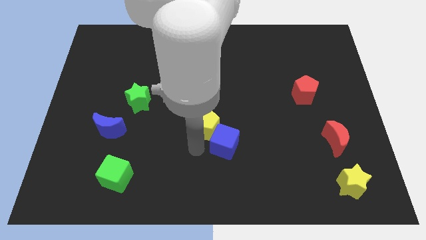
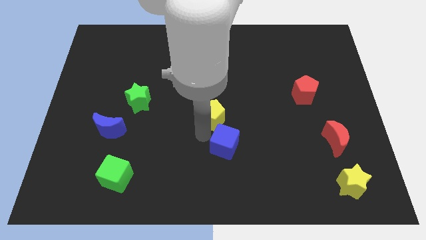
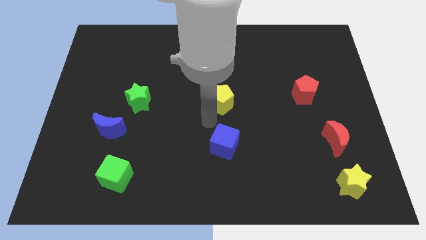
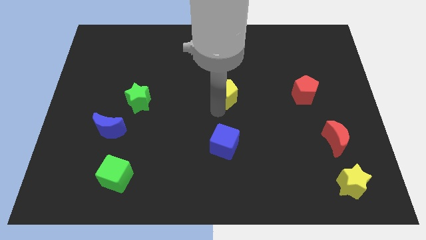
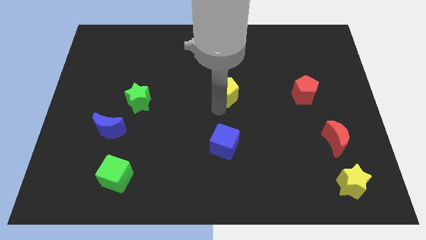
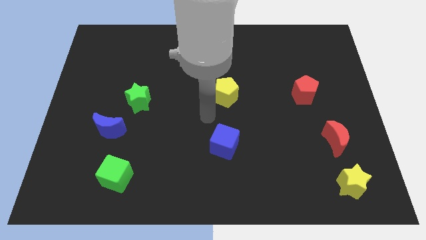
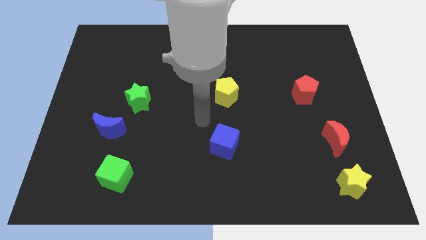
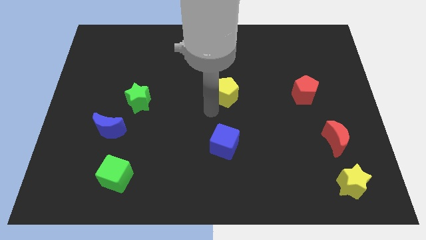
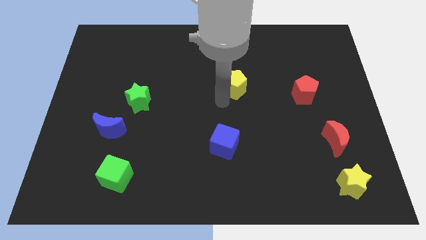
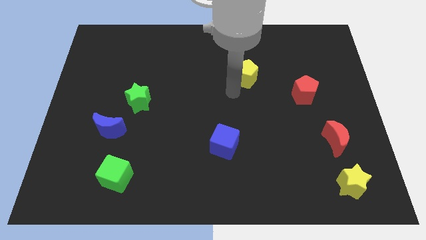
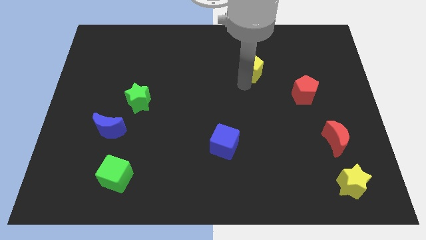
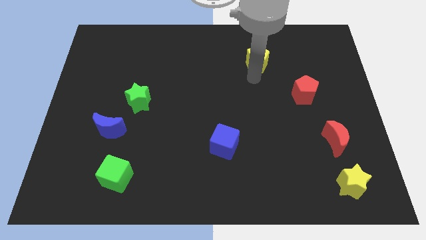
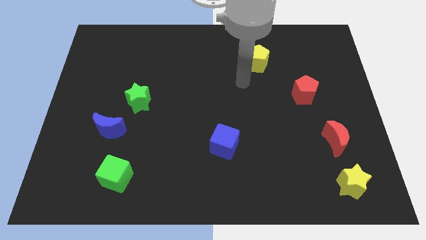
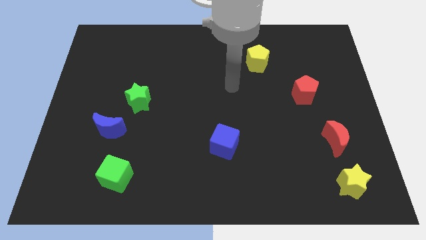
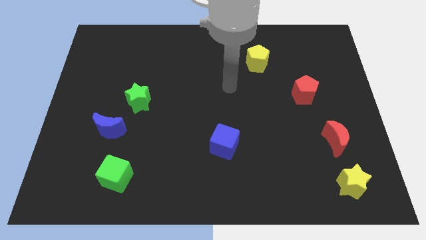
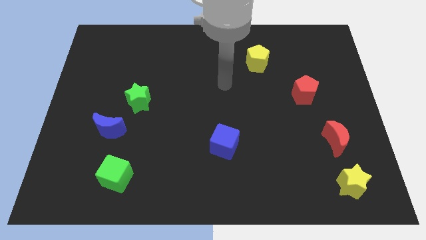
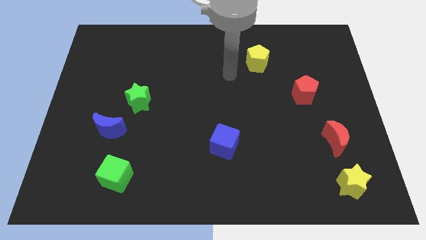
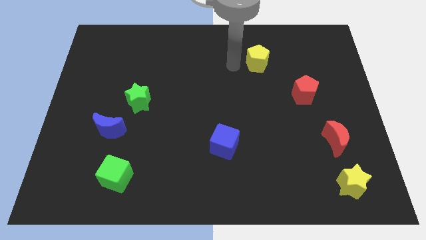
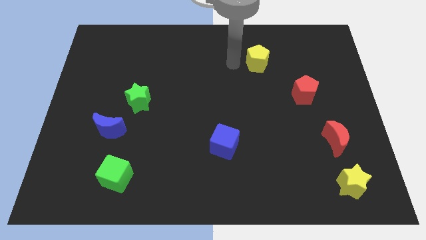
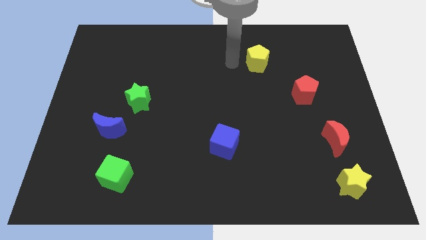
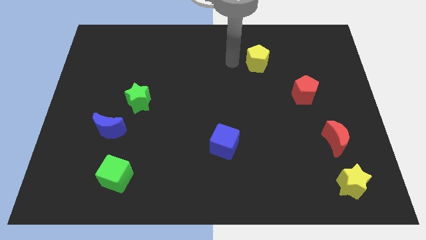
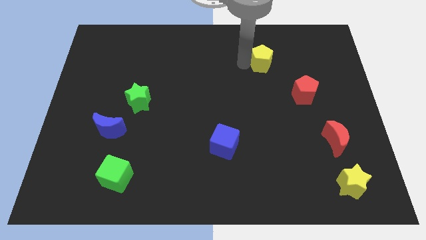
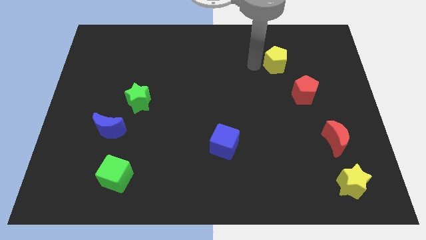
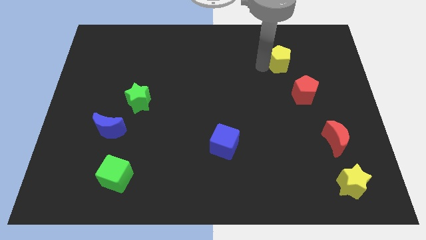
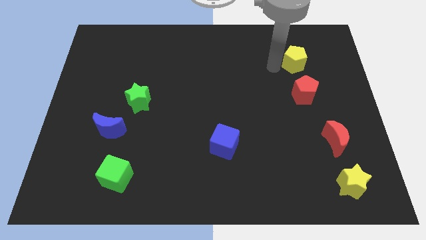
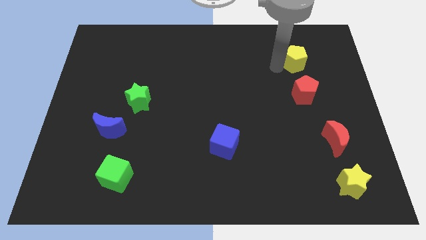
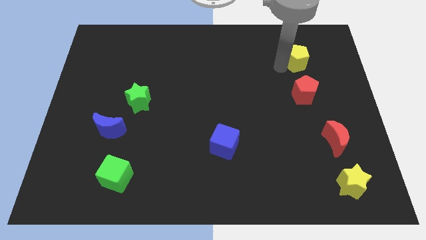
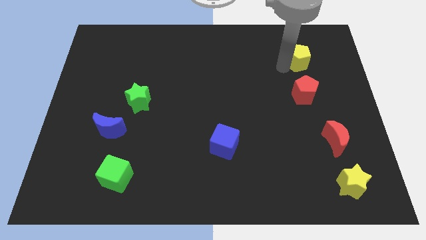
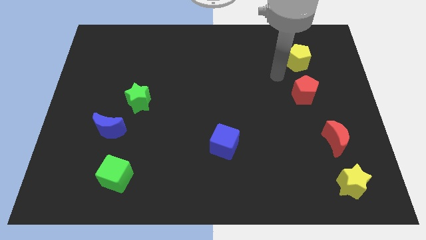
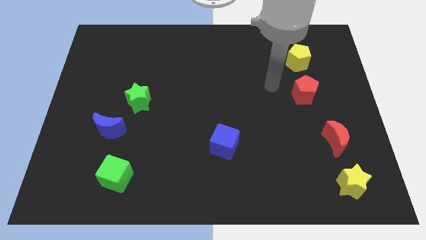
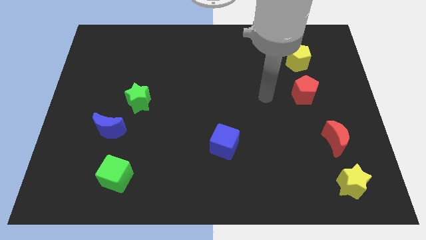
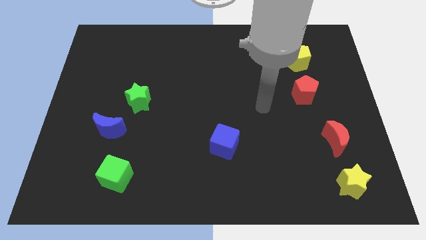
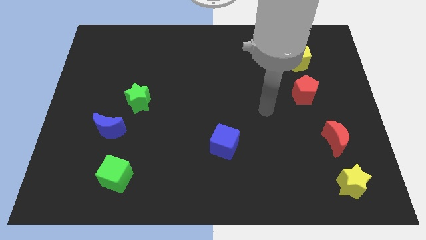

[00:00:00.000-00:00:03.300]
move the yellow pentagon towards the top of the red pentagon

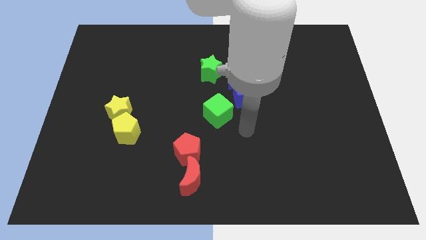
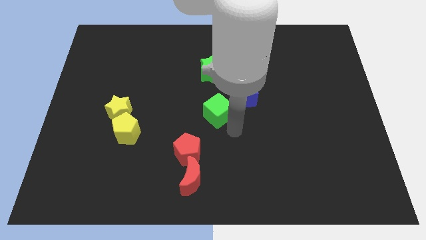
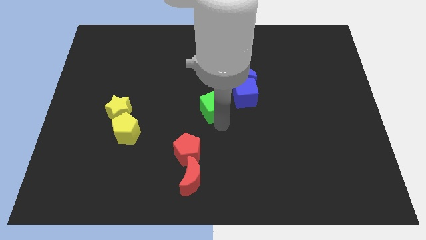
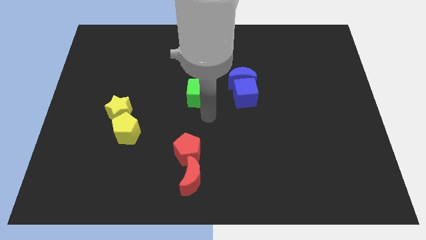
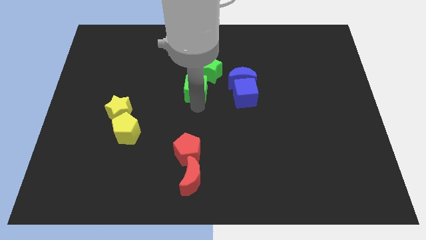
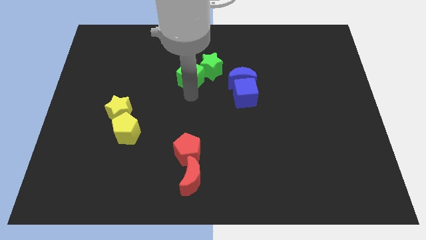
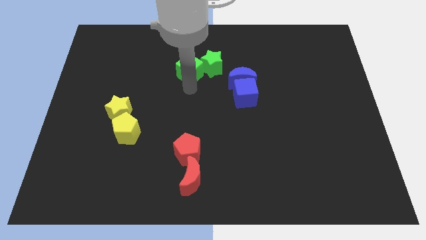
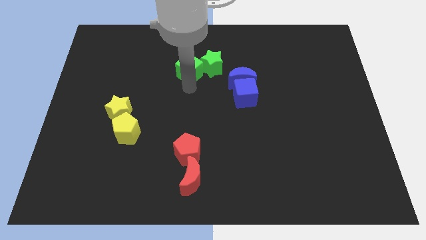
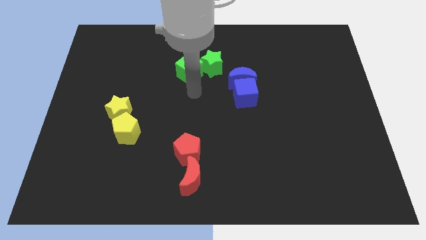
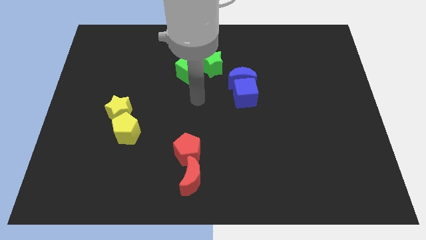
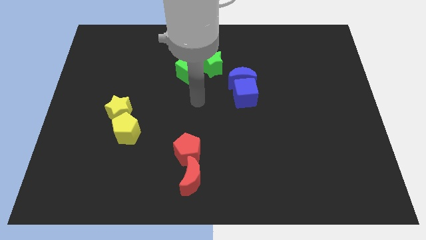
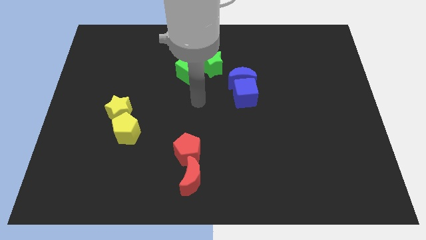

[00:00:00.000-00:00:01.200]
place the green cube left to the green star

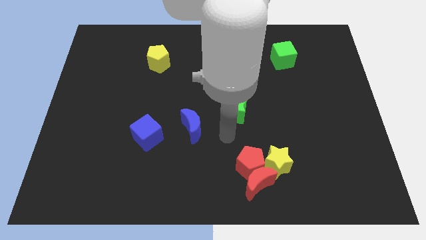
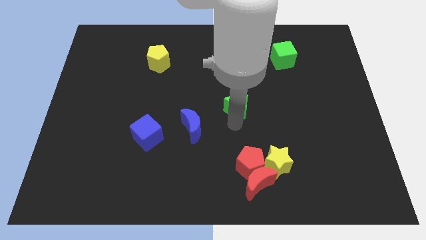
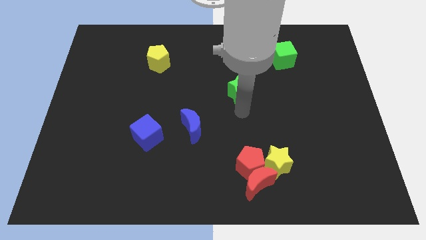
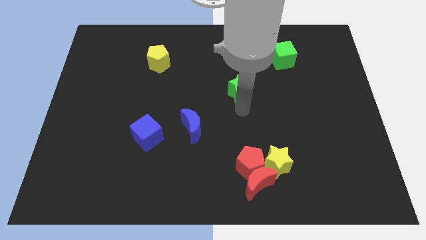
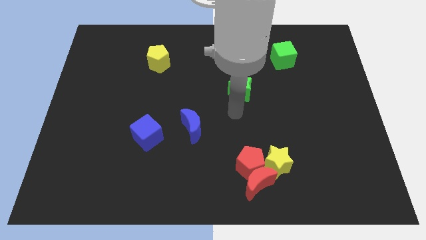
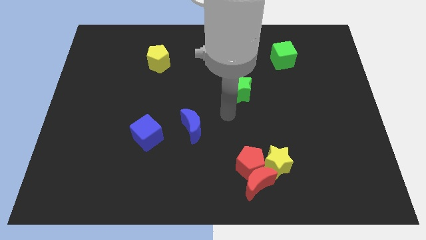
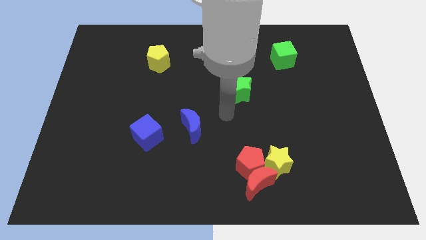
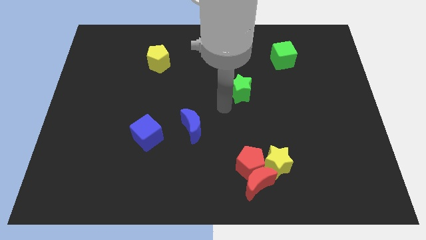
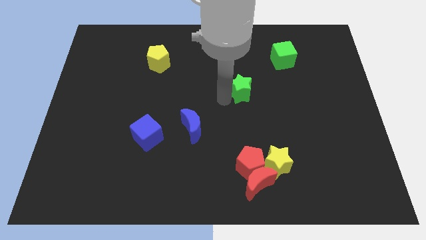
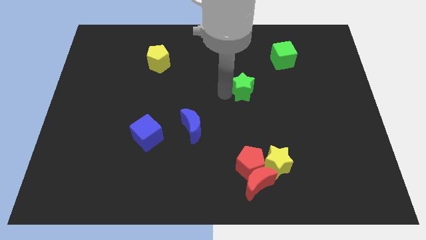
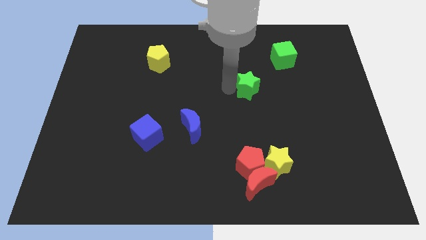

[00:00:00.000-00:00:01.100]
push the green star towards the green cube

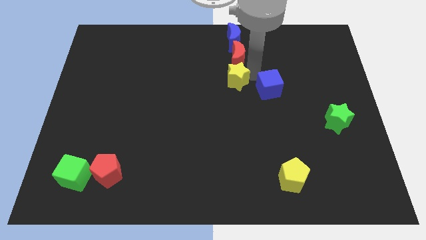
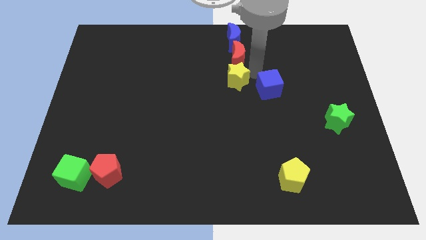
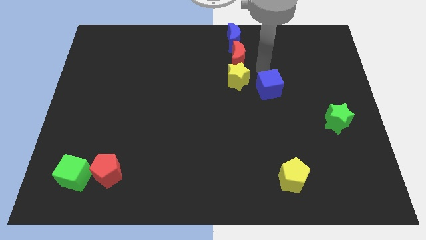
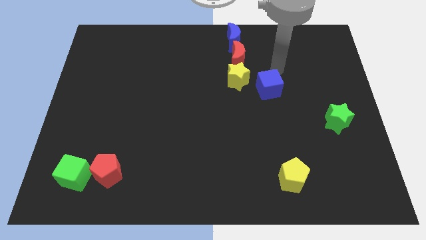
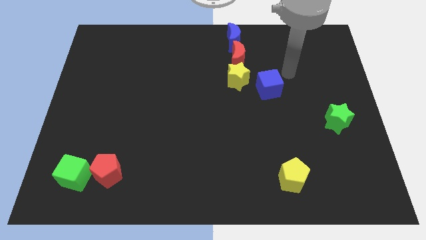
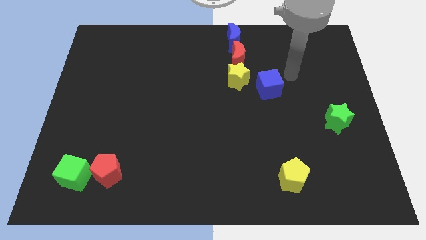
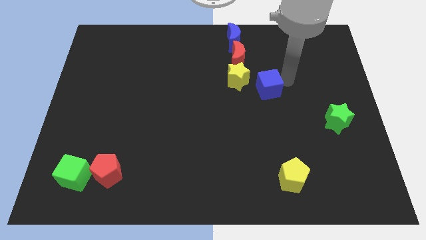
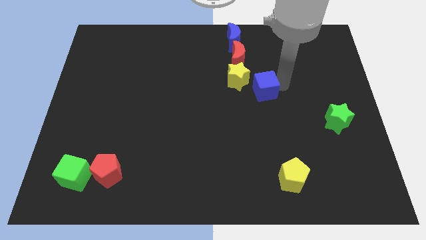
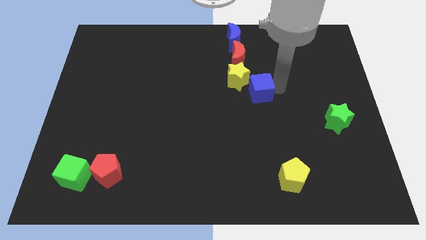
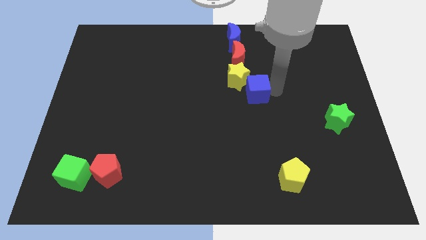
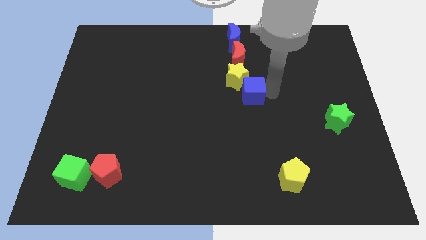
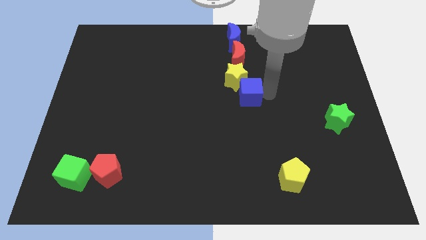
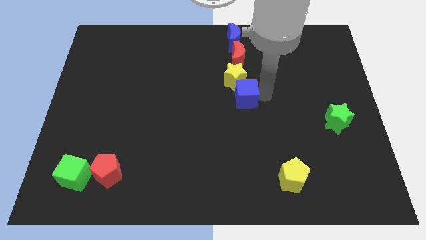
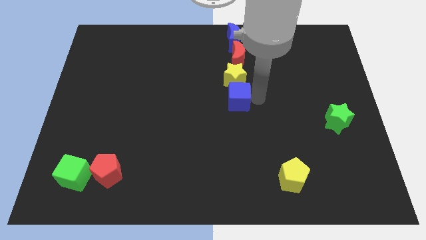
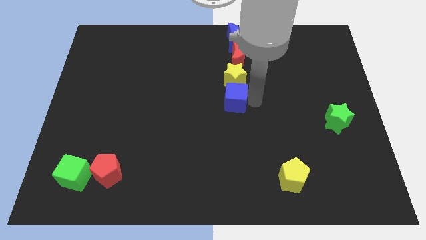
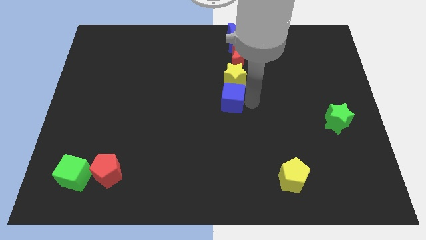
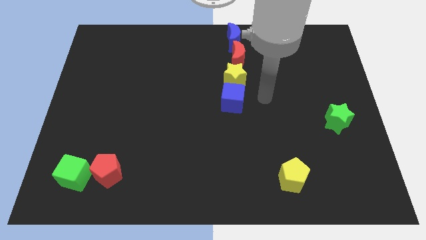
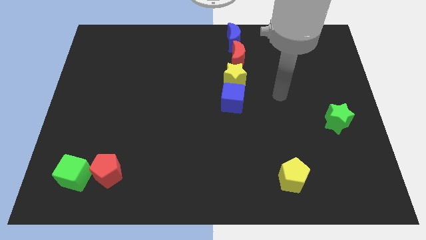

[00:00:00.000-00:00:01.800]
place the blue cube diagonally top left to the yellow pentagon

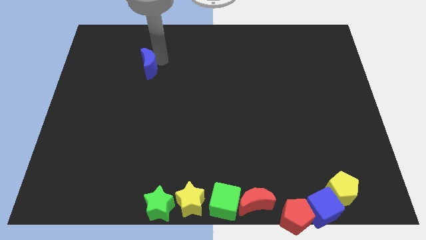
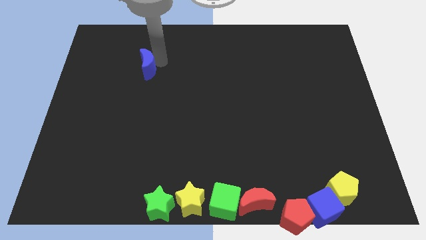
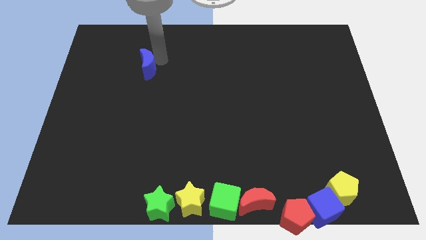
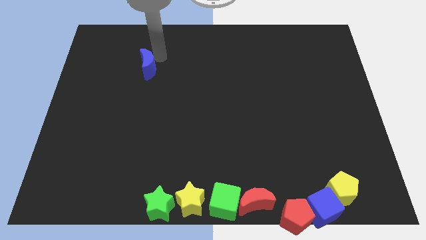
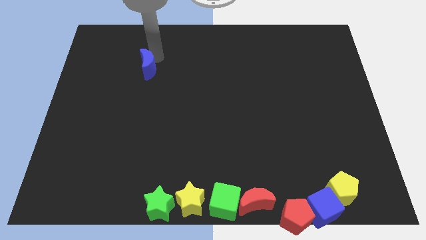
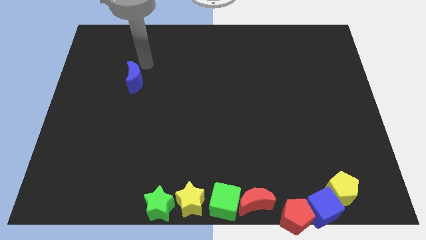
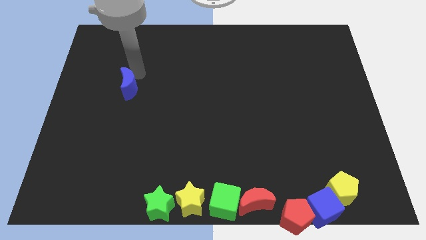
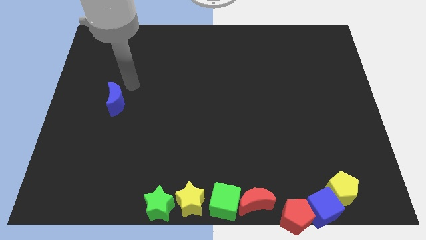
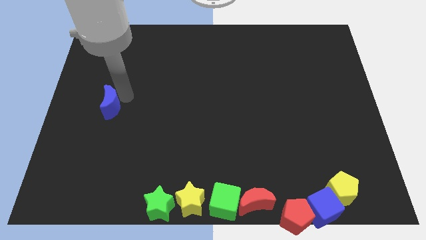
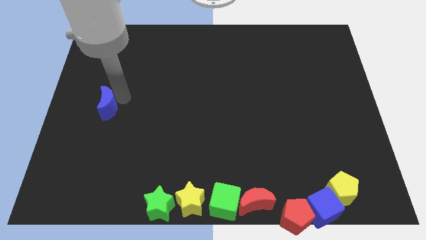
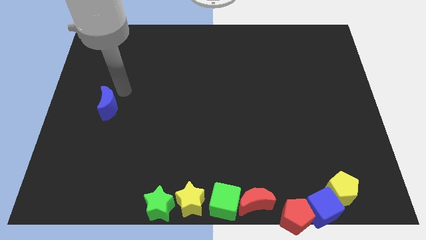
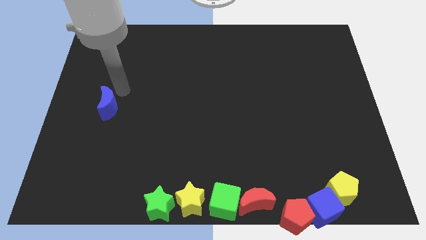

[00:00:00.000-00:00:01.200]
push the blue moon parallel to the left center of the board

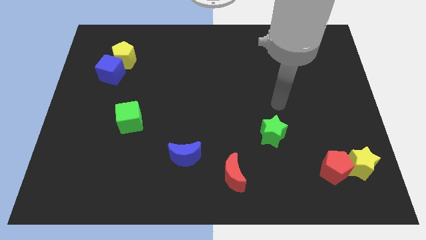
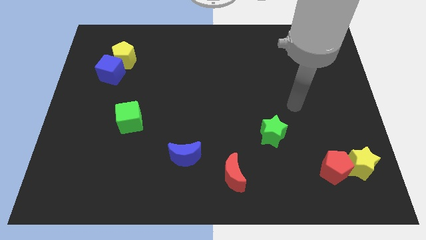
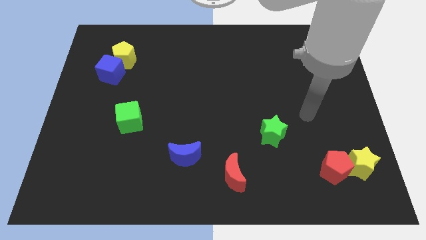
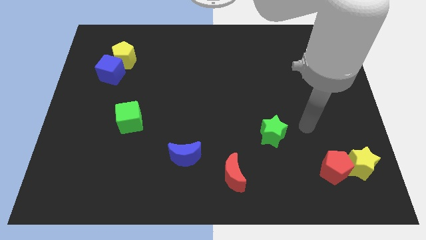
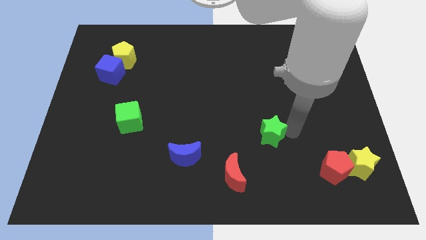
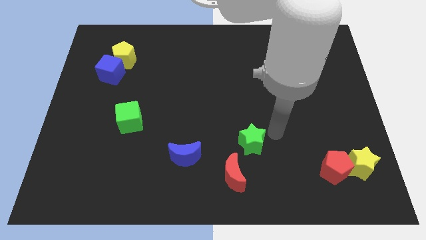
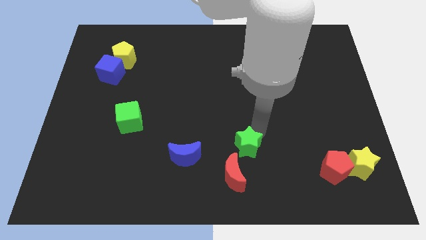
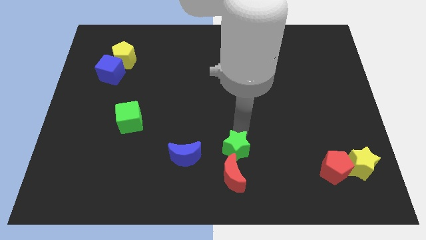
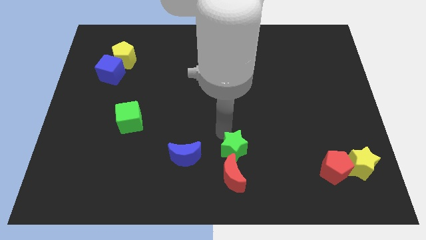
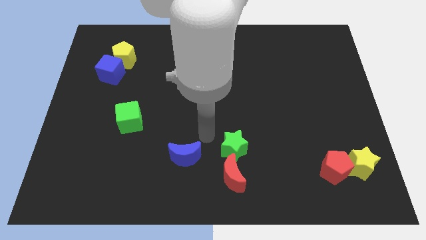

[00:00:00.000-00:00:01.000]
place green star to the top of red moon
